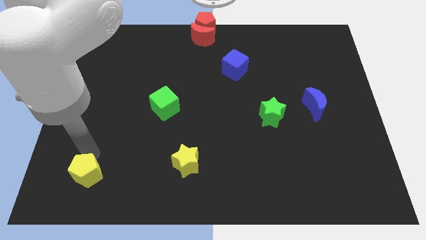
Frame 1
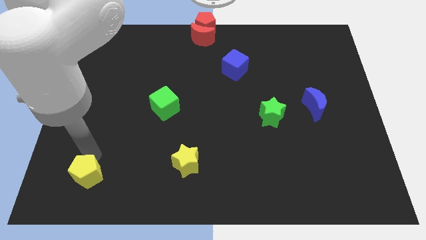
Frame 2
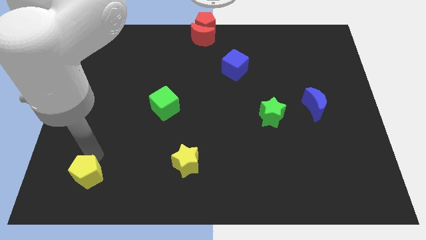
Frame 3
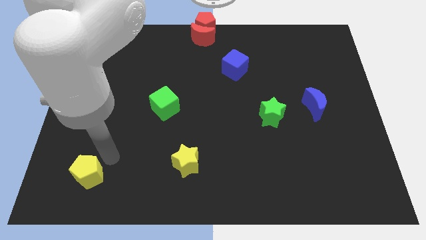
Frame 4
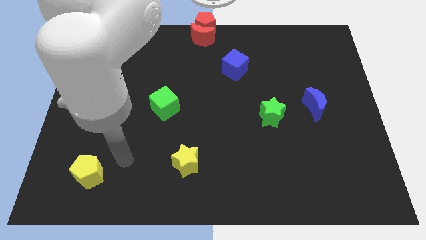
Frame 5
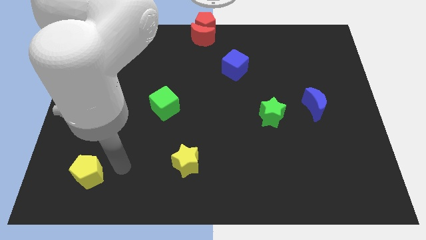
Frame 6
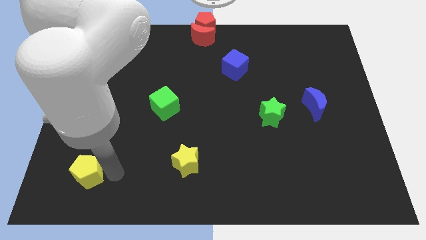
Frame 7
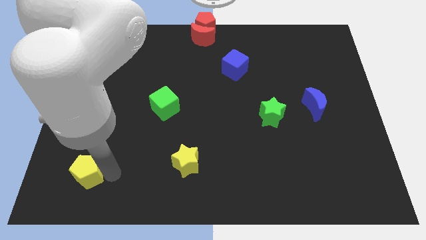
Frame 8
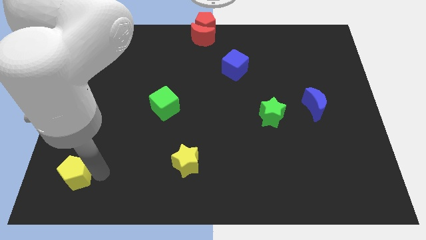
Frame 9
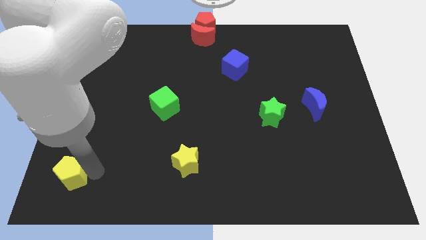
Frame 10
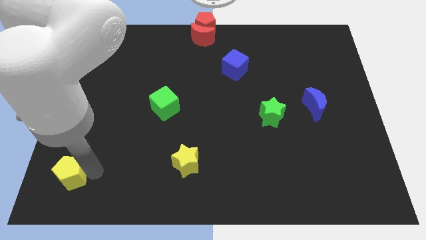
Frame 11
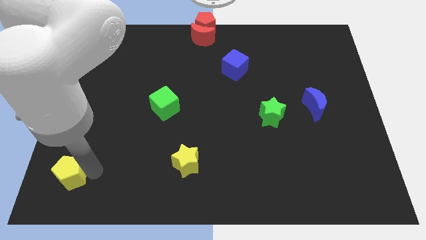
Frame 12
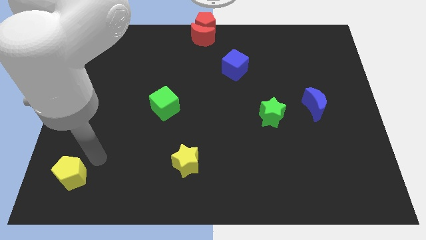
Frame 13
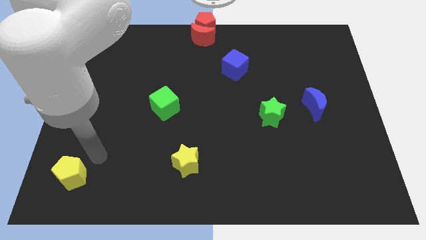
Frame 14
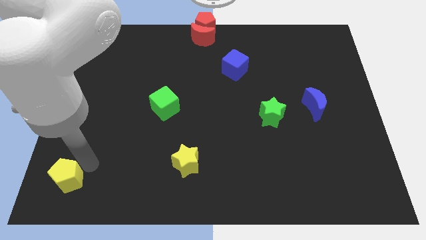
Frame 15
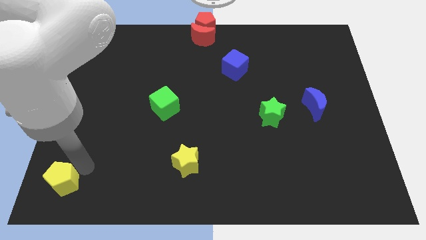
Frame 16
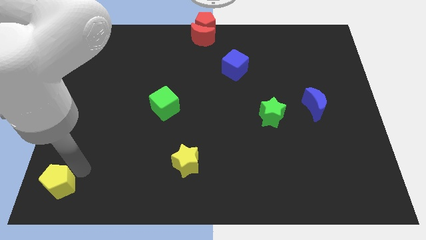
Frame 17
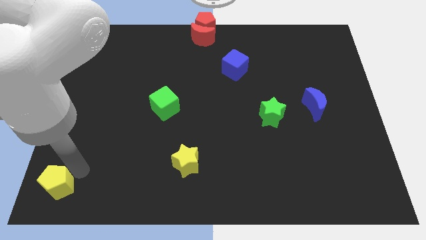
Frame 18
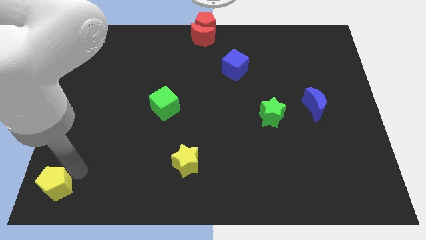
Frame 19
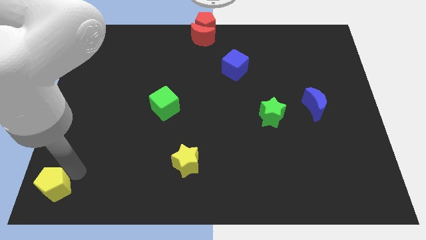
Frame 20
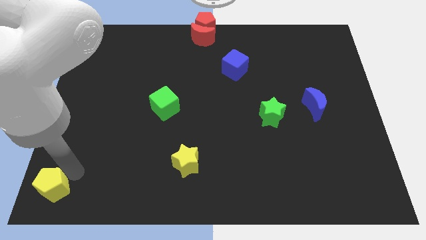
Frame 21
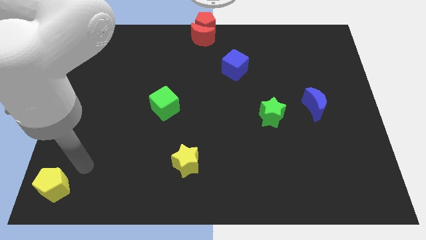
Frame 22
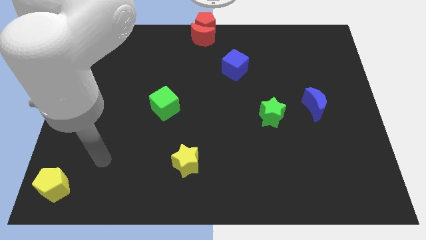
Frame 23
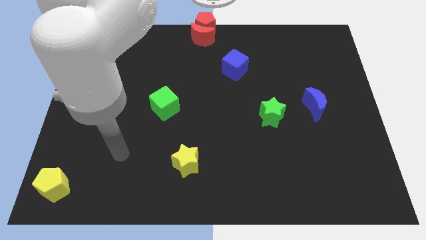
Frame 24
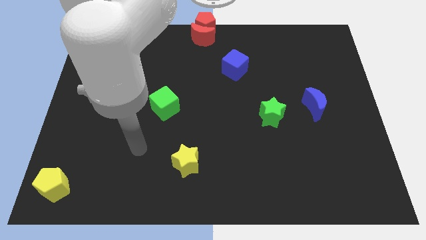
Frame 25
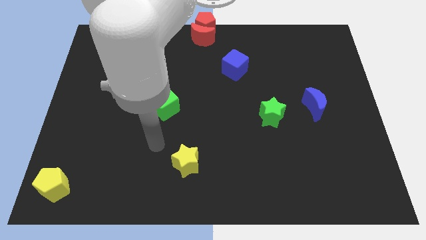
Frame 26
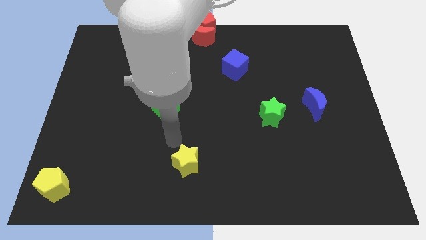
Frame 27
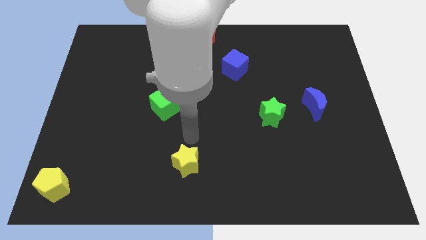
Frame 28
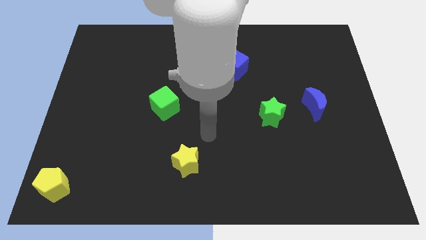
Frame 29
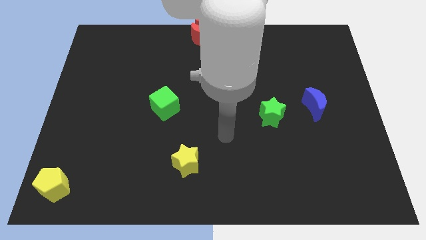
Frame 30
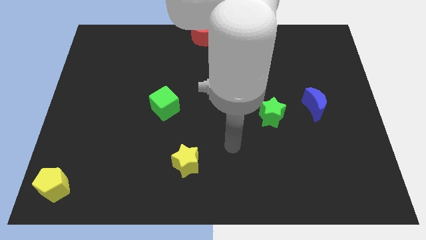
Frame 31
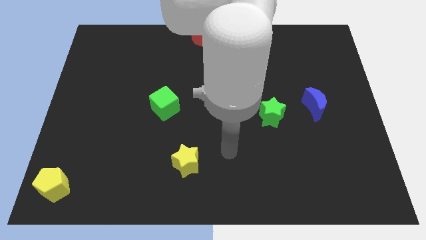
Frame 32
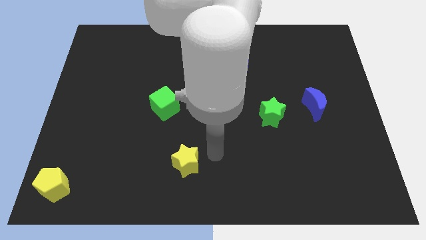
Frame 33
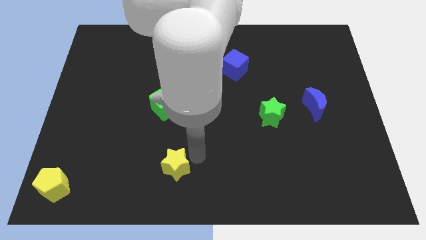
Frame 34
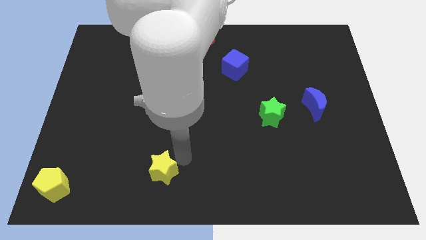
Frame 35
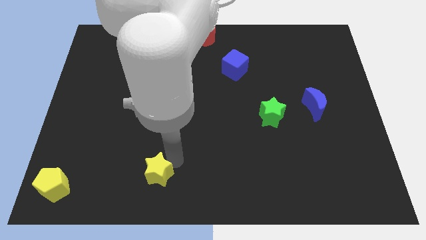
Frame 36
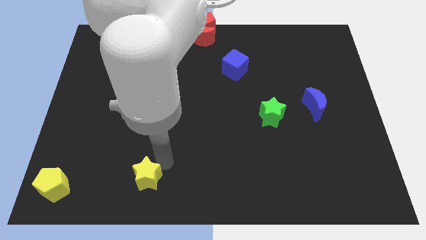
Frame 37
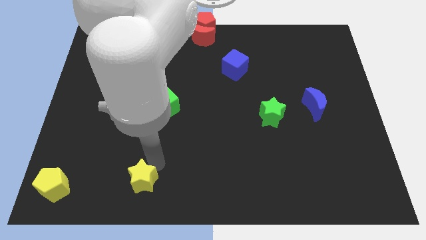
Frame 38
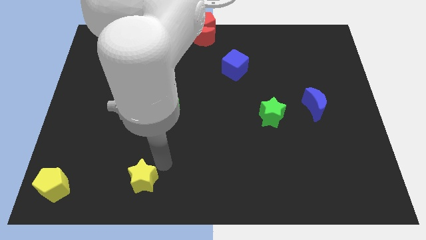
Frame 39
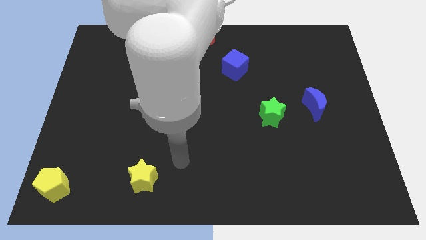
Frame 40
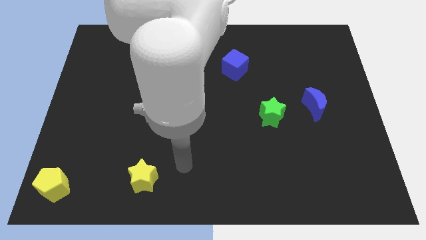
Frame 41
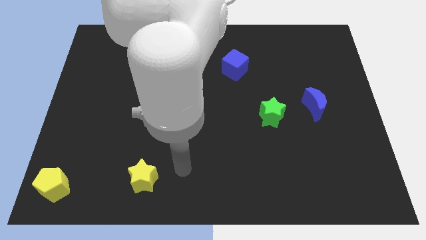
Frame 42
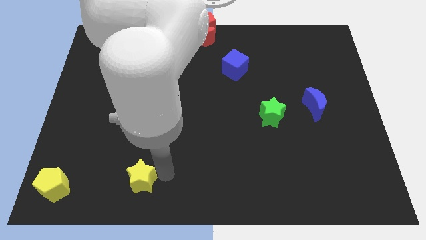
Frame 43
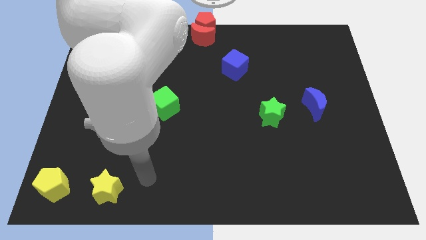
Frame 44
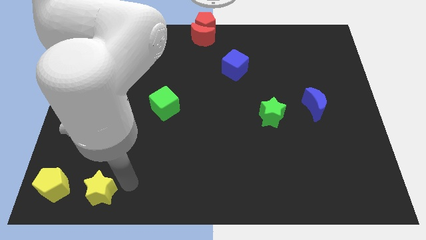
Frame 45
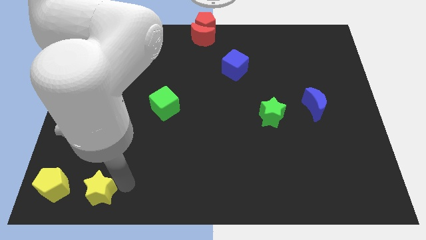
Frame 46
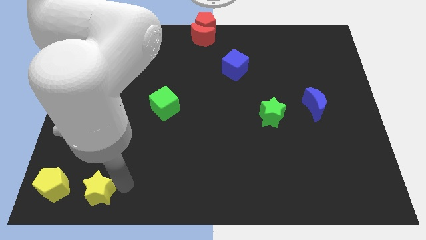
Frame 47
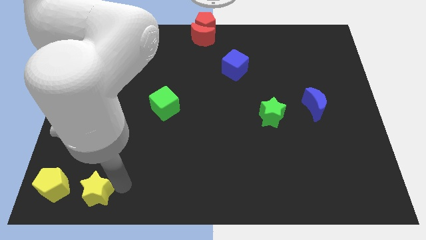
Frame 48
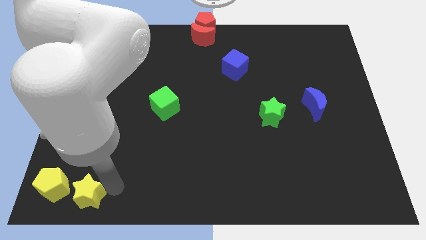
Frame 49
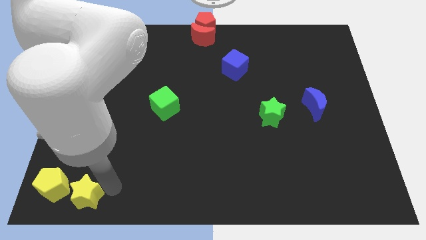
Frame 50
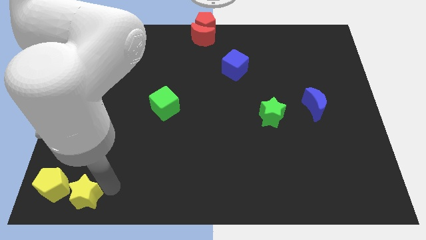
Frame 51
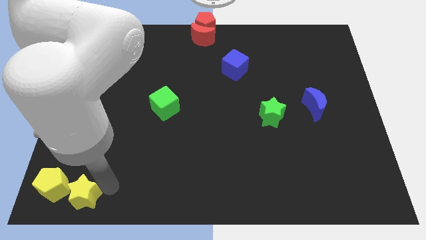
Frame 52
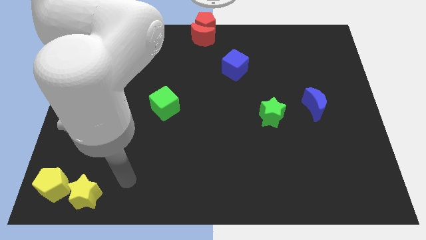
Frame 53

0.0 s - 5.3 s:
place the yellow star to the right of the yellow pentagon

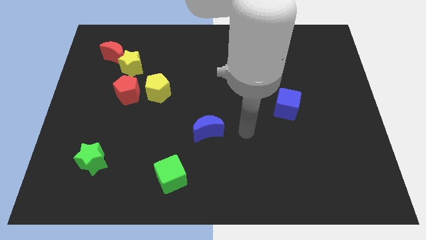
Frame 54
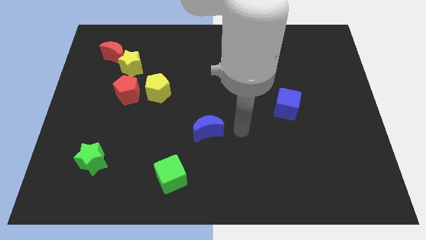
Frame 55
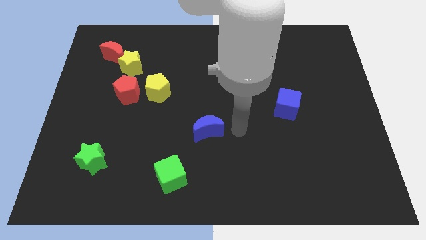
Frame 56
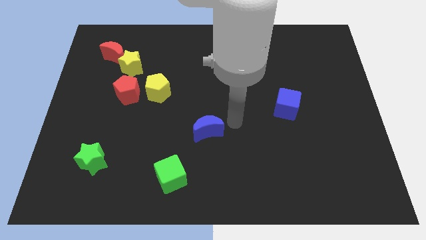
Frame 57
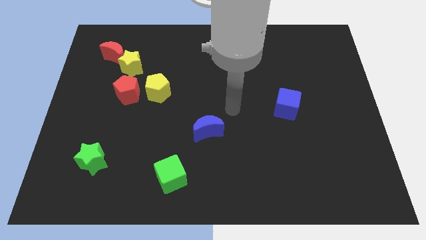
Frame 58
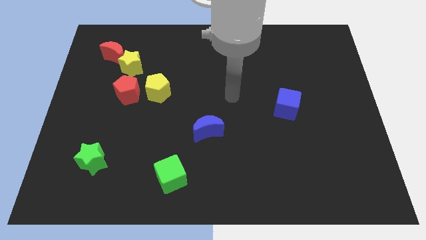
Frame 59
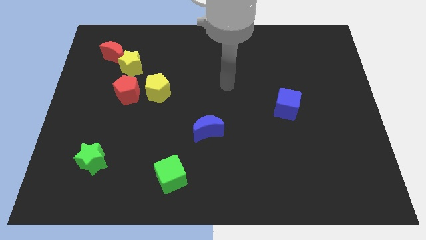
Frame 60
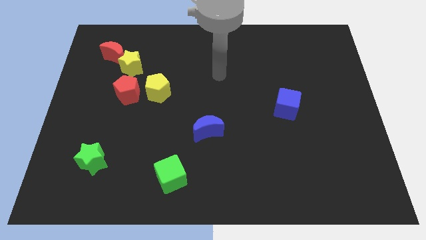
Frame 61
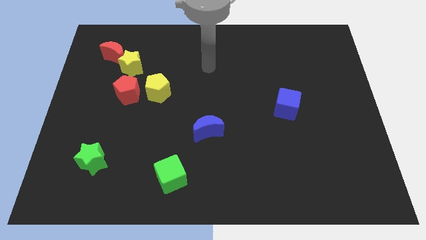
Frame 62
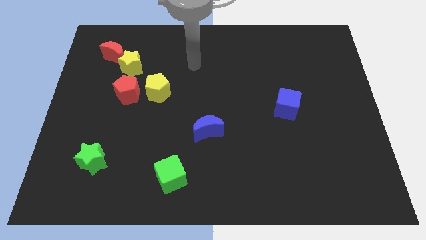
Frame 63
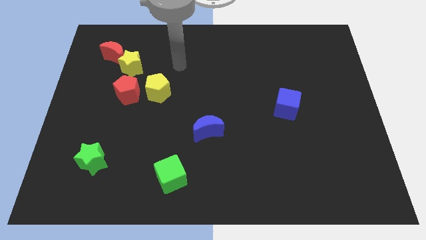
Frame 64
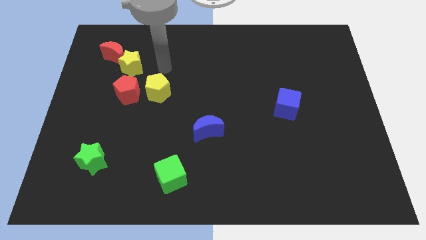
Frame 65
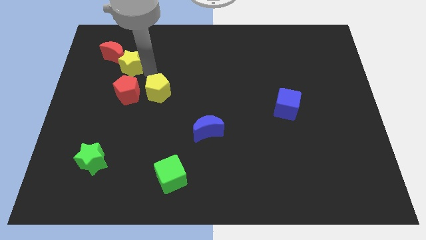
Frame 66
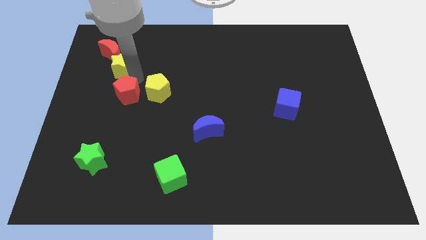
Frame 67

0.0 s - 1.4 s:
place the arm close to the yellow star

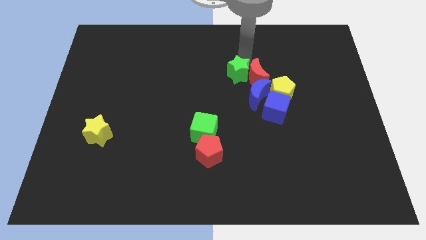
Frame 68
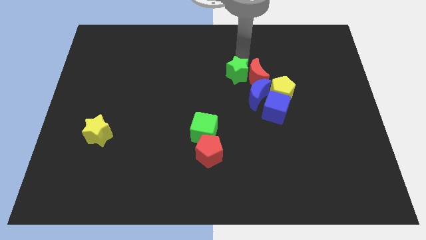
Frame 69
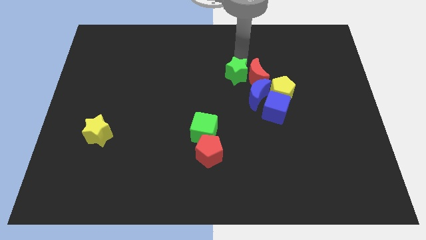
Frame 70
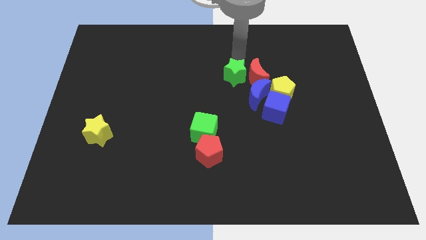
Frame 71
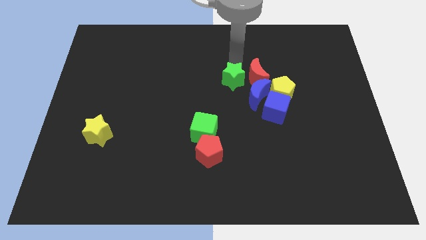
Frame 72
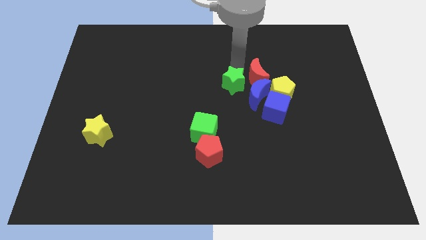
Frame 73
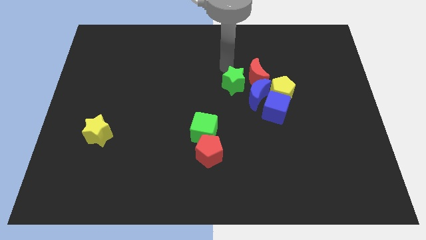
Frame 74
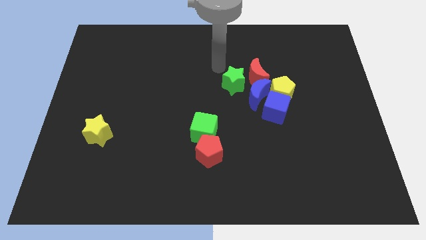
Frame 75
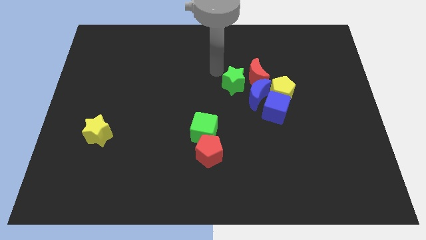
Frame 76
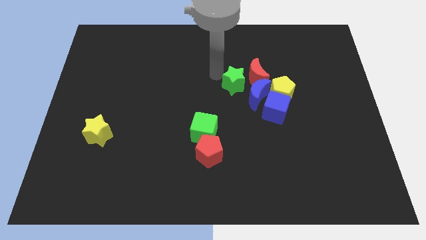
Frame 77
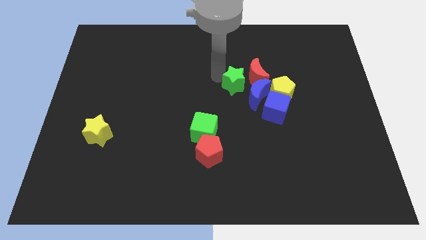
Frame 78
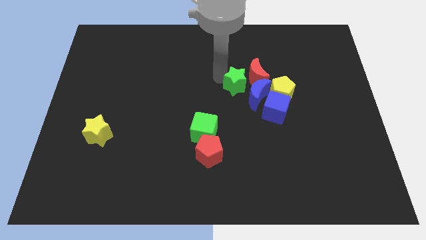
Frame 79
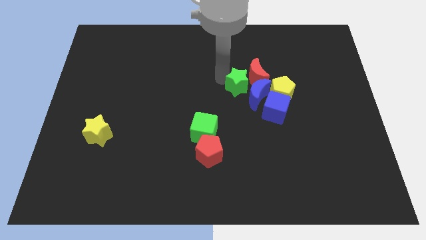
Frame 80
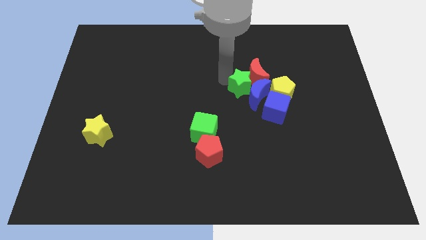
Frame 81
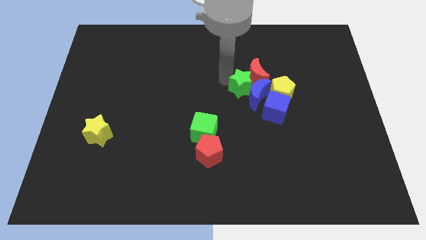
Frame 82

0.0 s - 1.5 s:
place the green star to the left of blue crescent

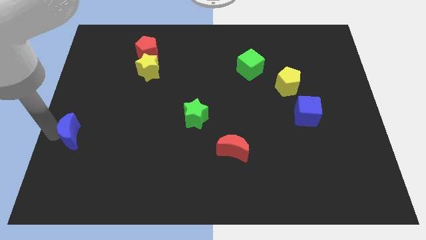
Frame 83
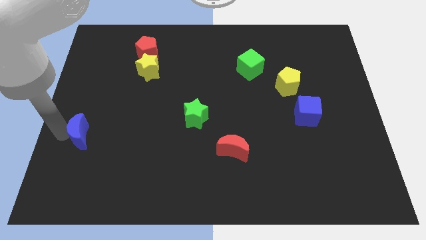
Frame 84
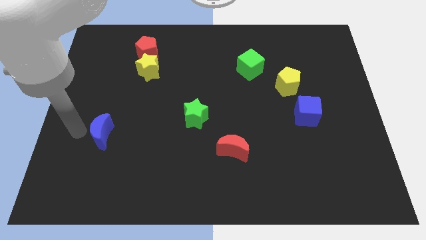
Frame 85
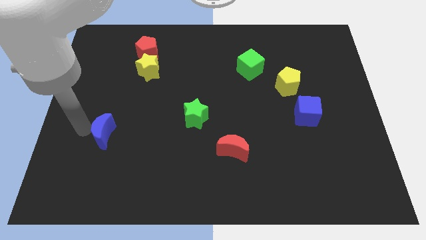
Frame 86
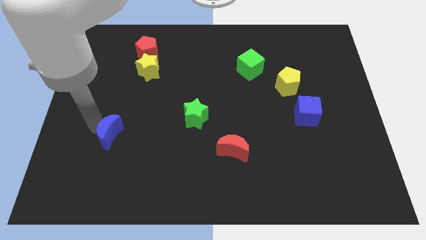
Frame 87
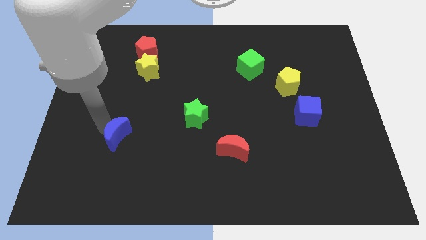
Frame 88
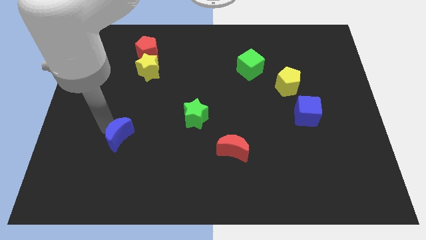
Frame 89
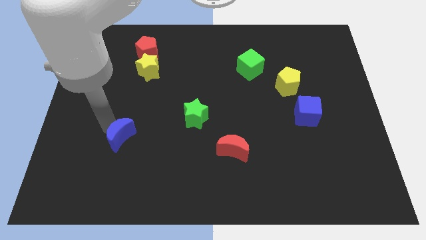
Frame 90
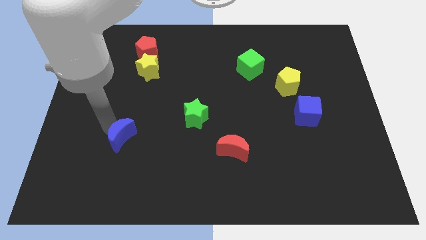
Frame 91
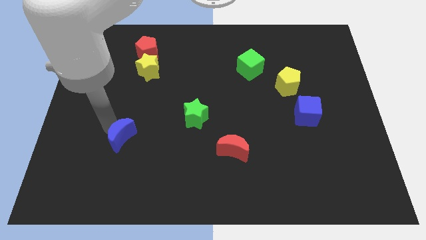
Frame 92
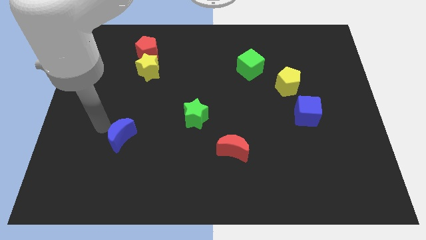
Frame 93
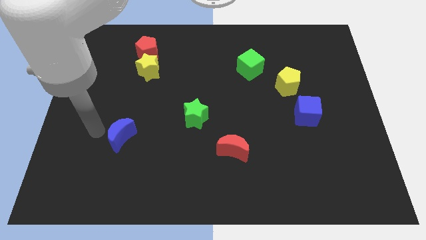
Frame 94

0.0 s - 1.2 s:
move the blue crescent to the right of the board
